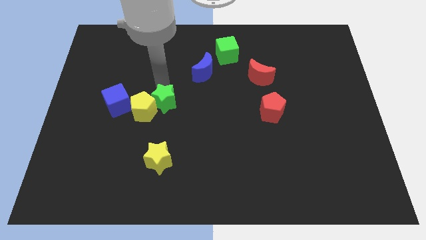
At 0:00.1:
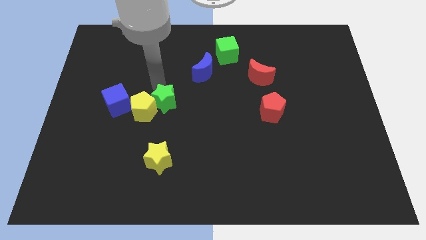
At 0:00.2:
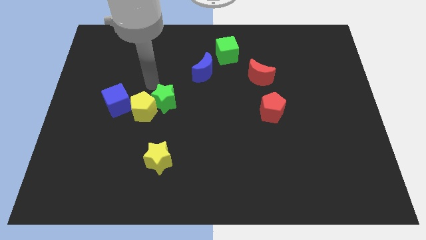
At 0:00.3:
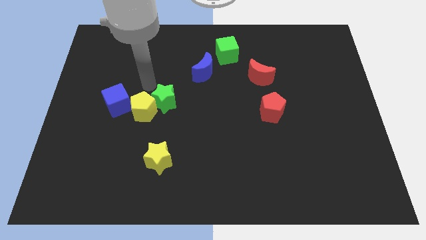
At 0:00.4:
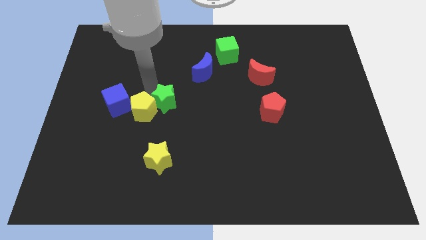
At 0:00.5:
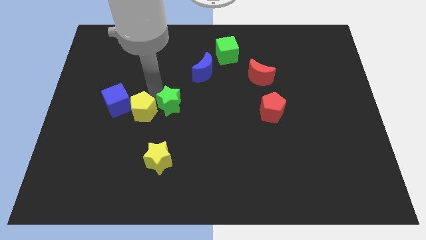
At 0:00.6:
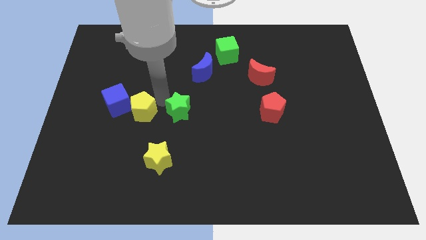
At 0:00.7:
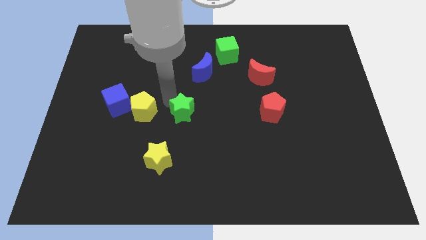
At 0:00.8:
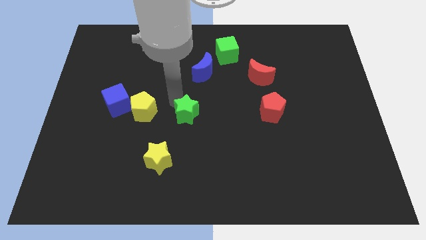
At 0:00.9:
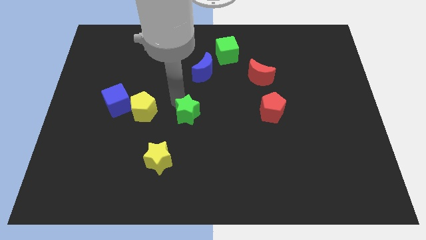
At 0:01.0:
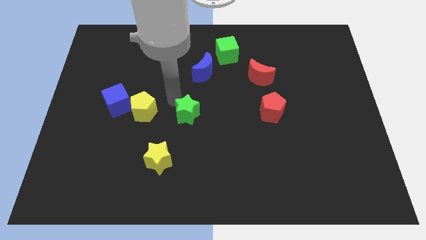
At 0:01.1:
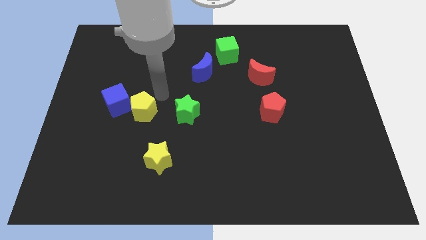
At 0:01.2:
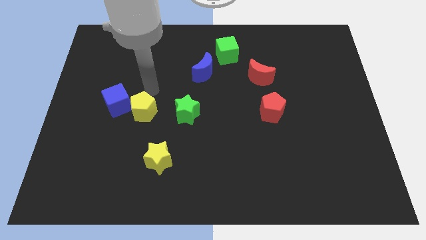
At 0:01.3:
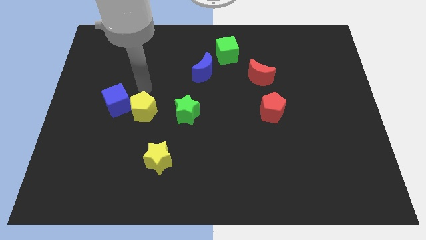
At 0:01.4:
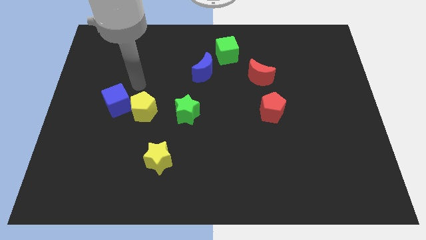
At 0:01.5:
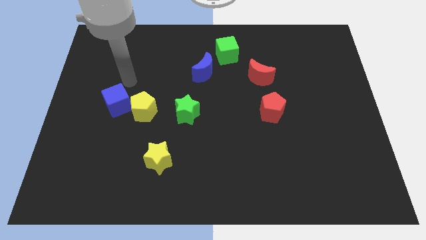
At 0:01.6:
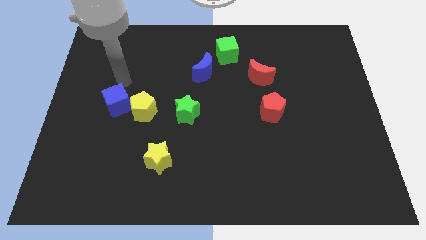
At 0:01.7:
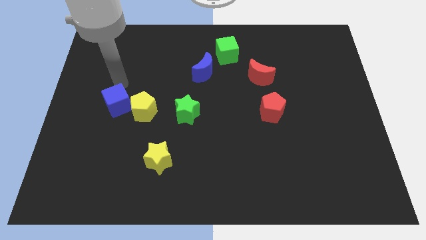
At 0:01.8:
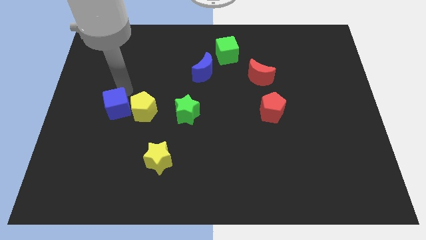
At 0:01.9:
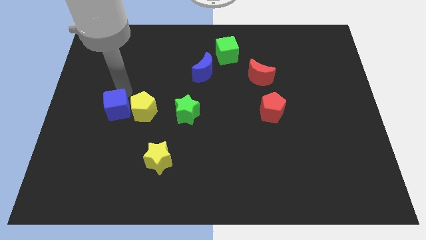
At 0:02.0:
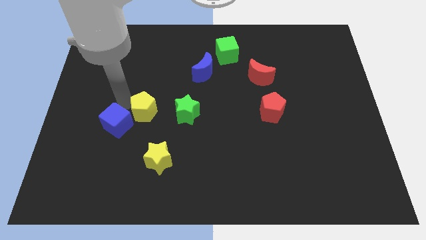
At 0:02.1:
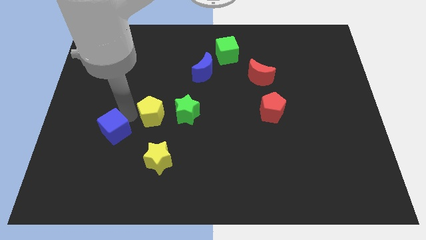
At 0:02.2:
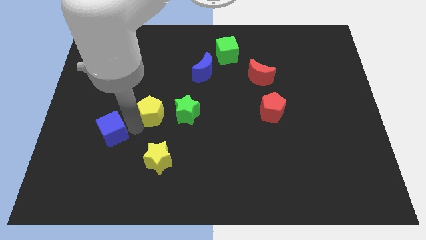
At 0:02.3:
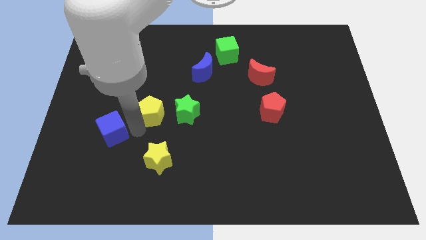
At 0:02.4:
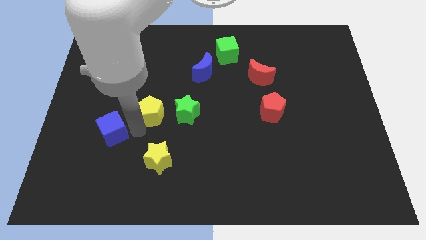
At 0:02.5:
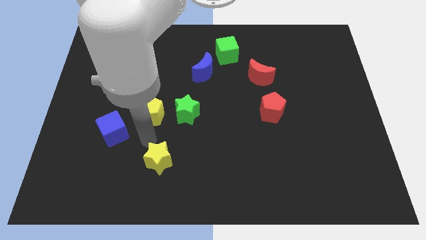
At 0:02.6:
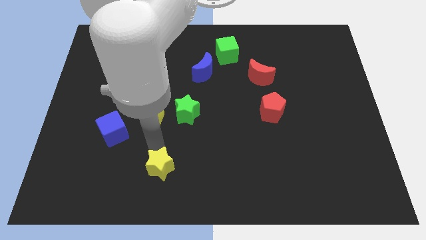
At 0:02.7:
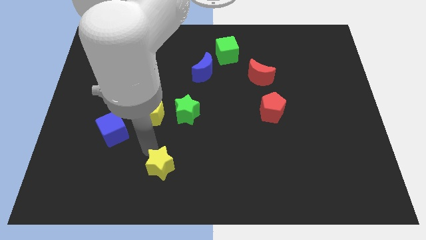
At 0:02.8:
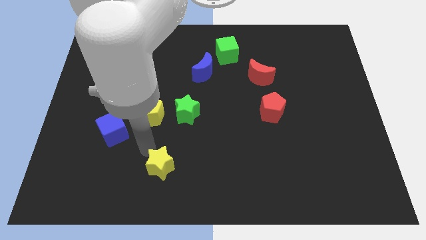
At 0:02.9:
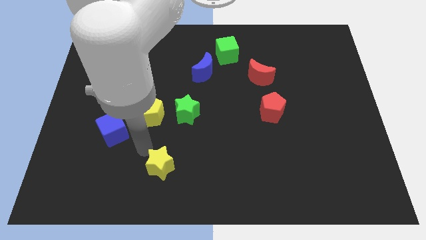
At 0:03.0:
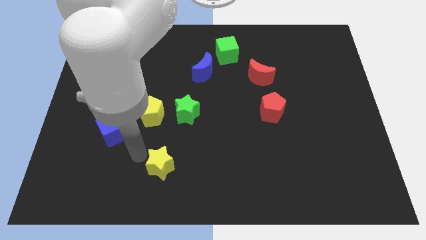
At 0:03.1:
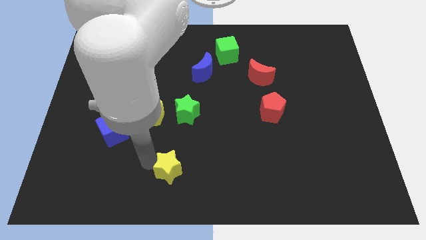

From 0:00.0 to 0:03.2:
separate blue cube and the green star from the yellow pentagon

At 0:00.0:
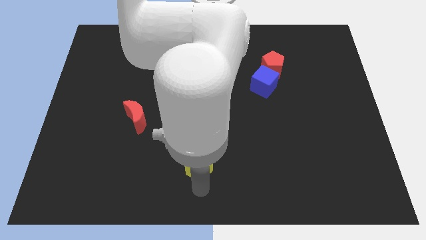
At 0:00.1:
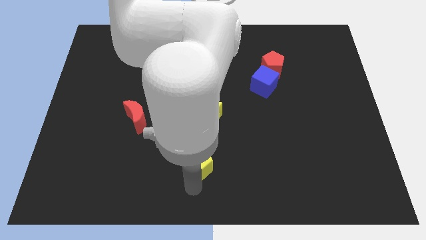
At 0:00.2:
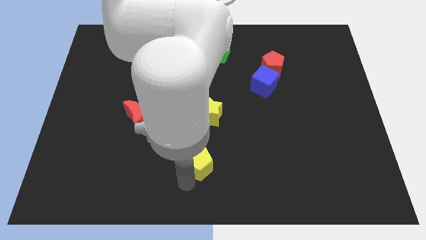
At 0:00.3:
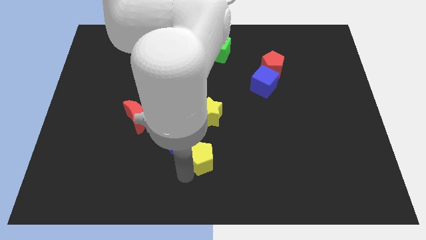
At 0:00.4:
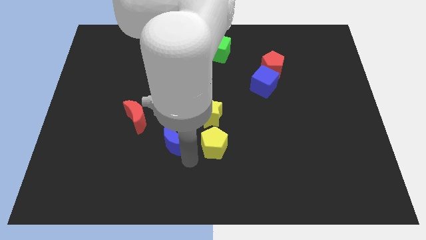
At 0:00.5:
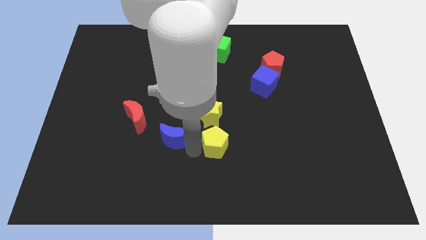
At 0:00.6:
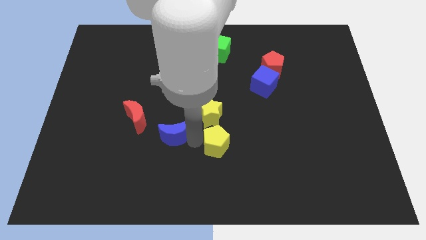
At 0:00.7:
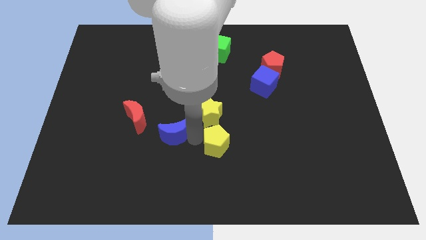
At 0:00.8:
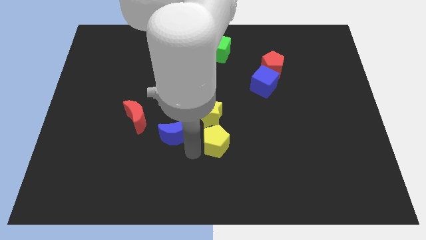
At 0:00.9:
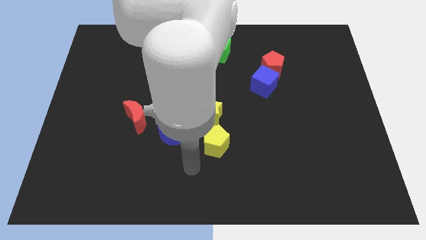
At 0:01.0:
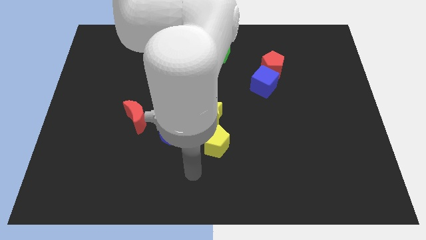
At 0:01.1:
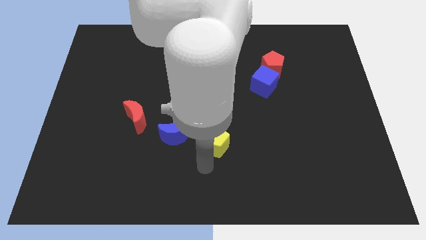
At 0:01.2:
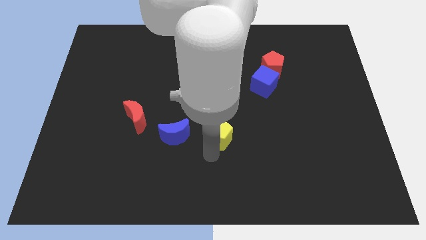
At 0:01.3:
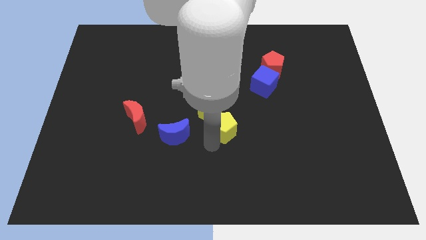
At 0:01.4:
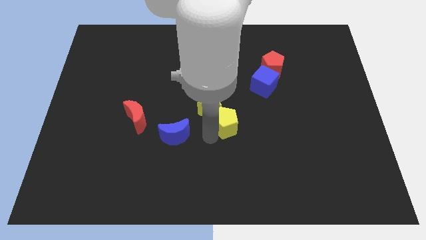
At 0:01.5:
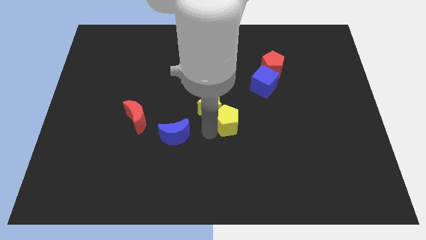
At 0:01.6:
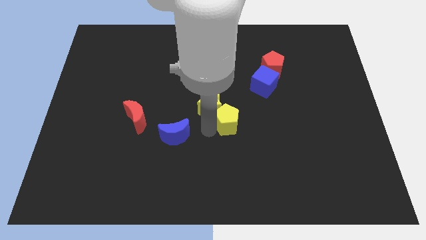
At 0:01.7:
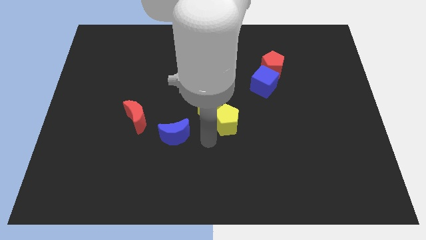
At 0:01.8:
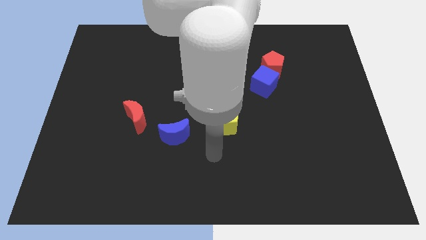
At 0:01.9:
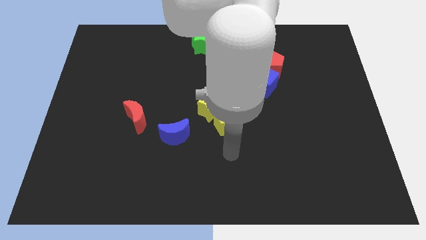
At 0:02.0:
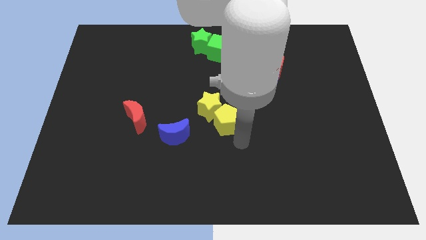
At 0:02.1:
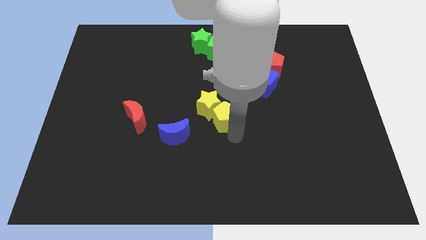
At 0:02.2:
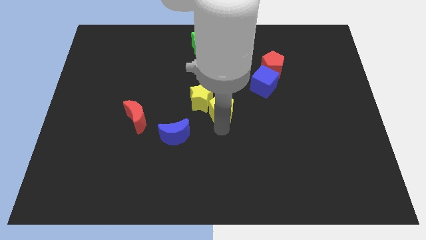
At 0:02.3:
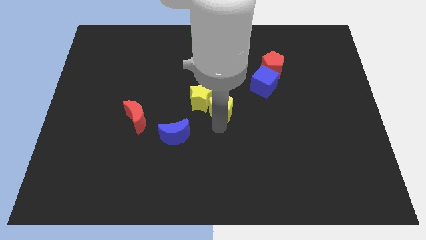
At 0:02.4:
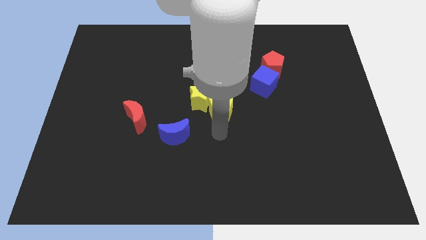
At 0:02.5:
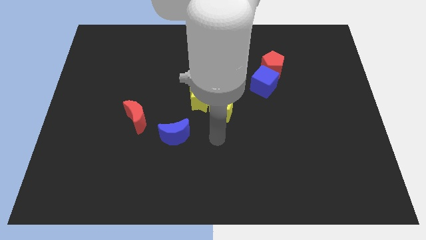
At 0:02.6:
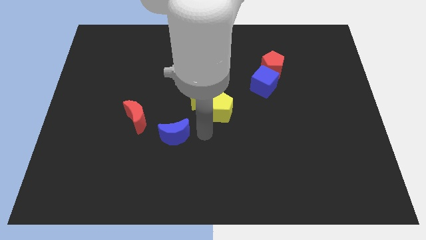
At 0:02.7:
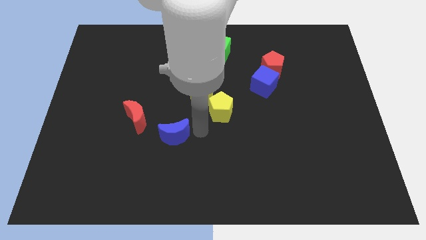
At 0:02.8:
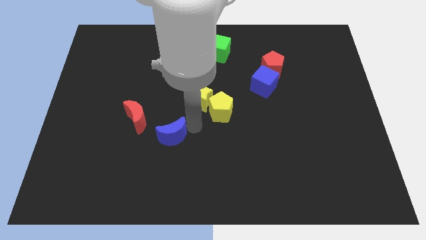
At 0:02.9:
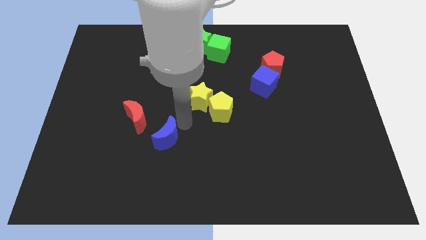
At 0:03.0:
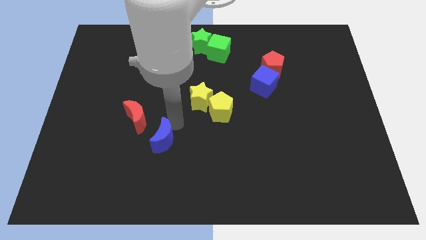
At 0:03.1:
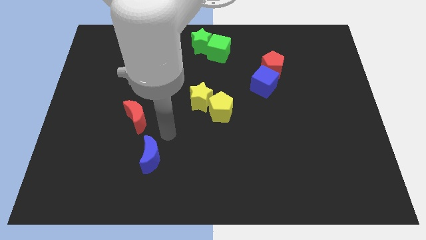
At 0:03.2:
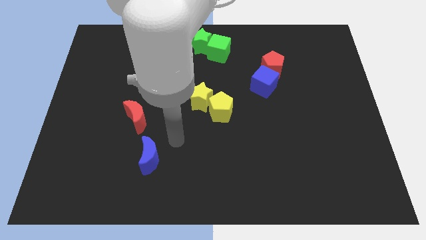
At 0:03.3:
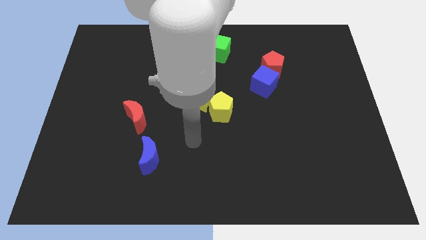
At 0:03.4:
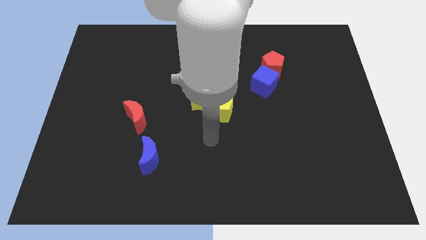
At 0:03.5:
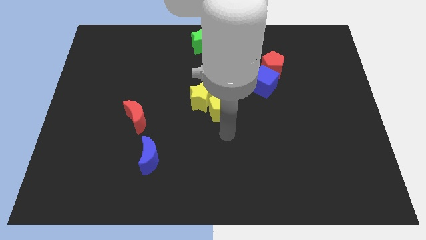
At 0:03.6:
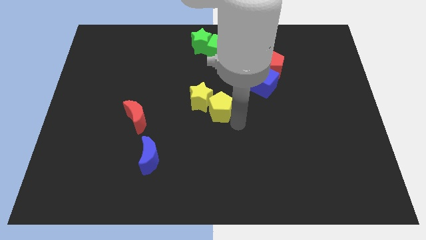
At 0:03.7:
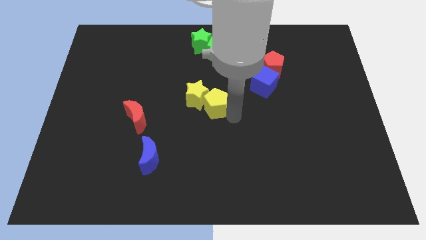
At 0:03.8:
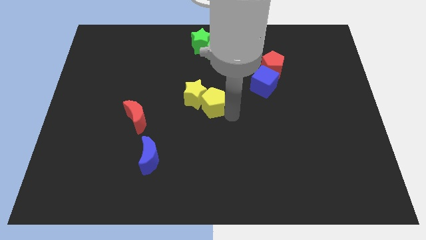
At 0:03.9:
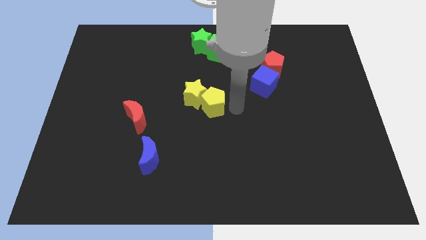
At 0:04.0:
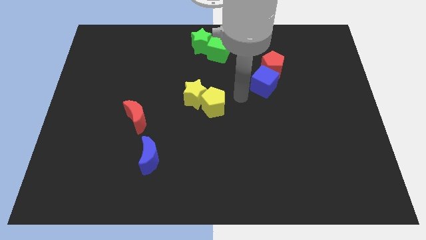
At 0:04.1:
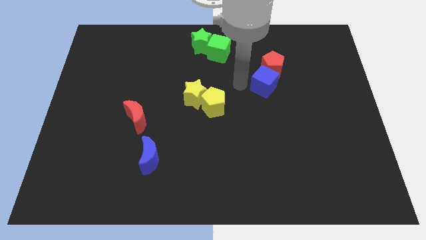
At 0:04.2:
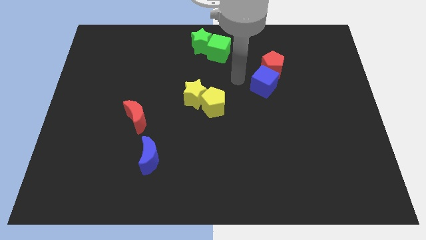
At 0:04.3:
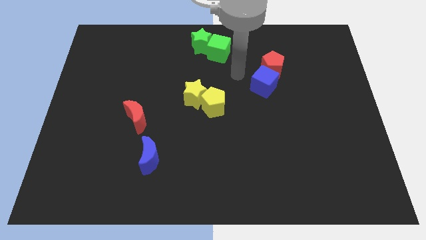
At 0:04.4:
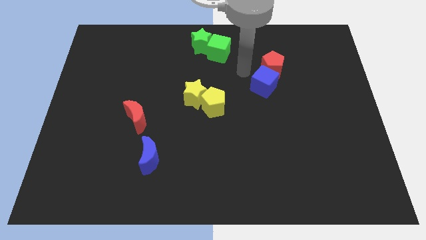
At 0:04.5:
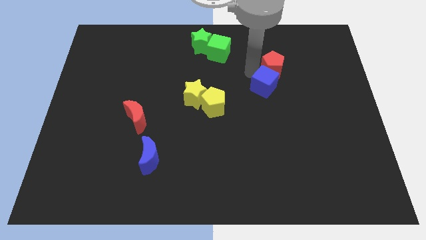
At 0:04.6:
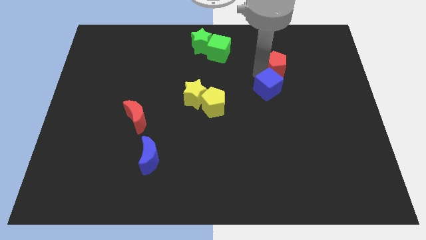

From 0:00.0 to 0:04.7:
push the yellow pentagon to the center of the board

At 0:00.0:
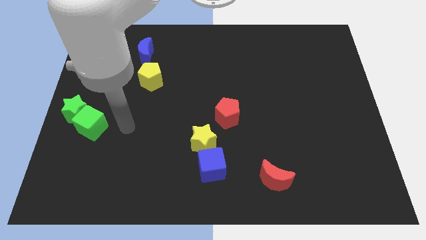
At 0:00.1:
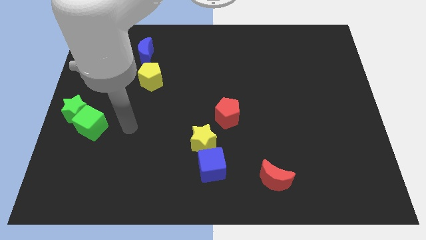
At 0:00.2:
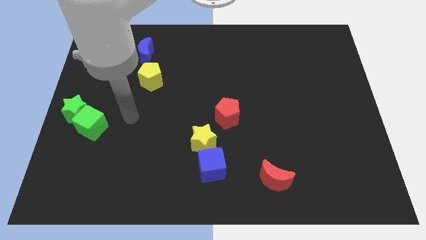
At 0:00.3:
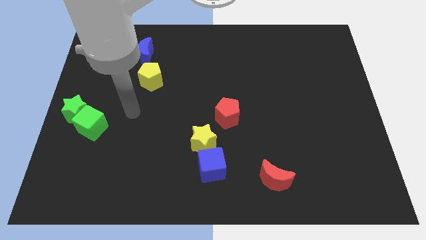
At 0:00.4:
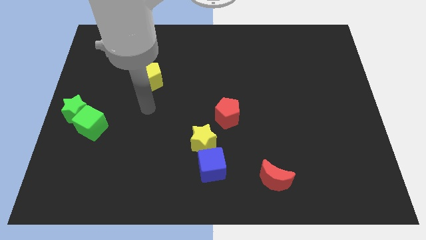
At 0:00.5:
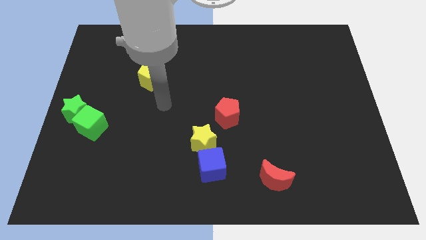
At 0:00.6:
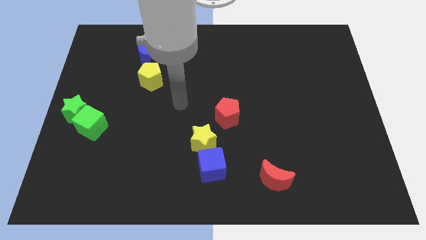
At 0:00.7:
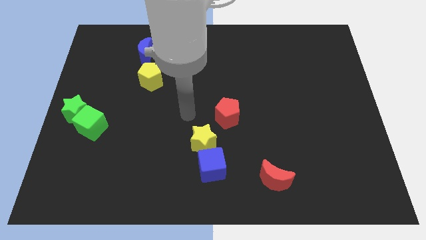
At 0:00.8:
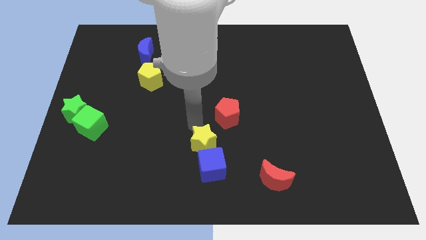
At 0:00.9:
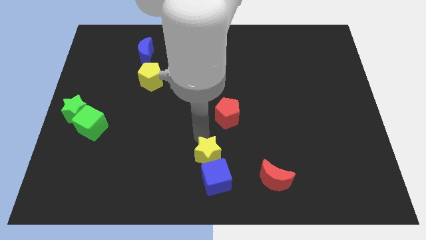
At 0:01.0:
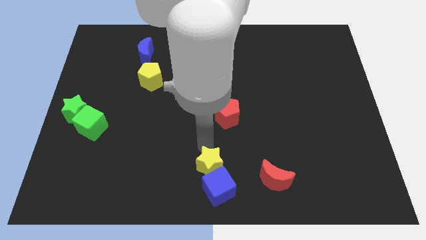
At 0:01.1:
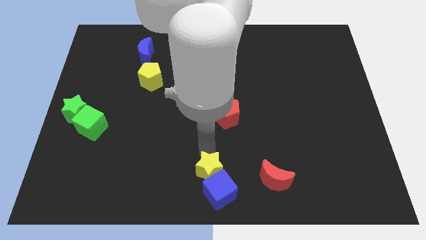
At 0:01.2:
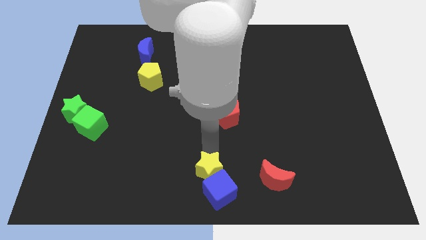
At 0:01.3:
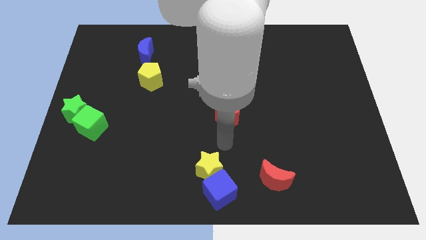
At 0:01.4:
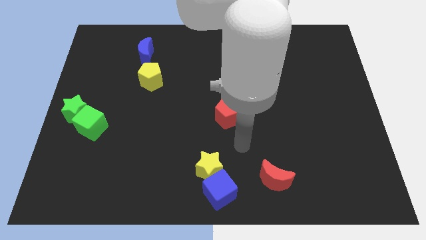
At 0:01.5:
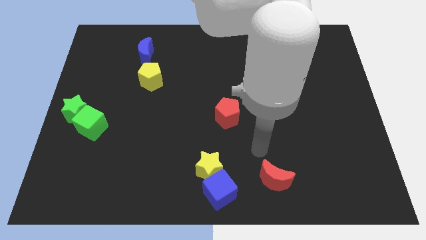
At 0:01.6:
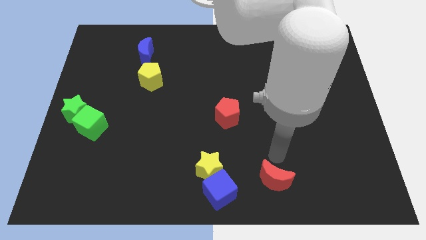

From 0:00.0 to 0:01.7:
push the yellow star along with the blue cube slightly to the bottom side
